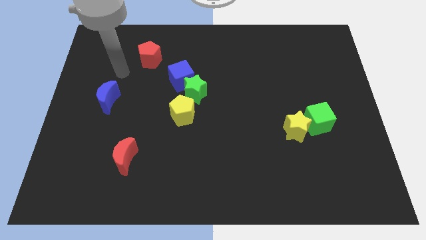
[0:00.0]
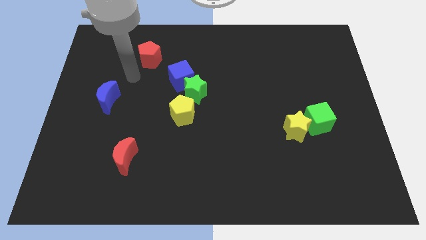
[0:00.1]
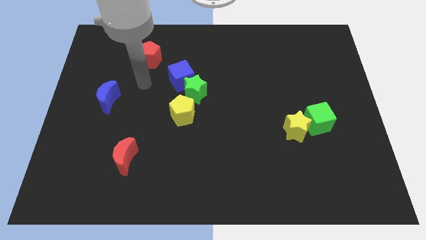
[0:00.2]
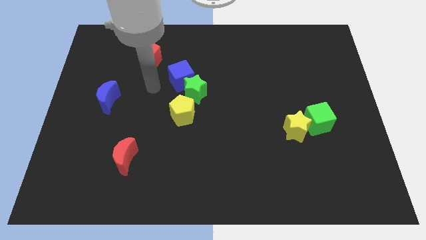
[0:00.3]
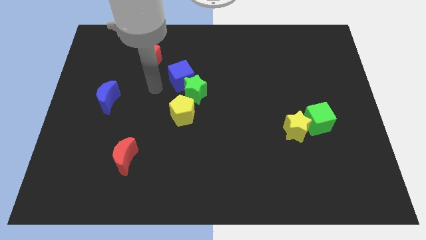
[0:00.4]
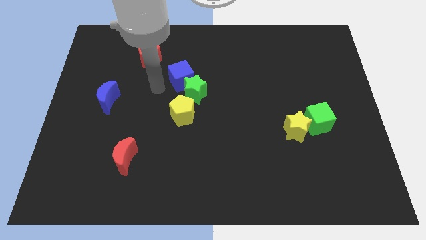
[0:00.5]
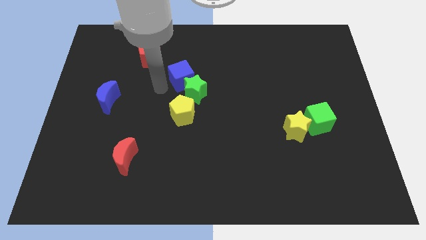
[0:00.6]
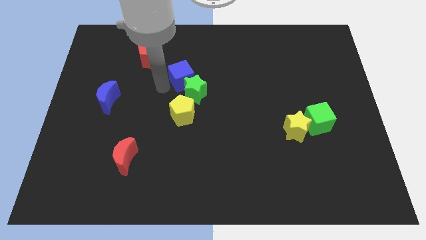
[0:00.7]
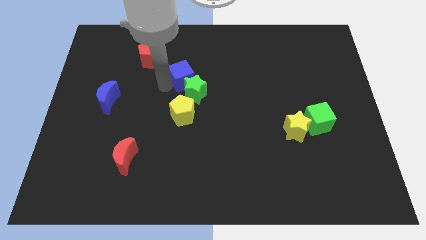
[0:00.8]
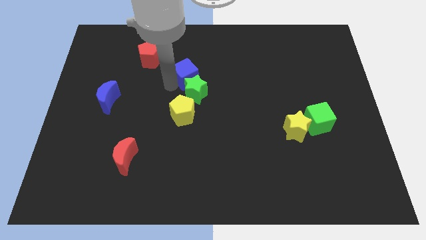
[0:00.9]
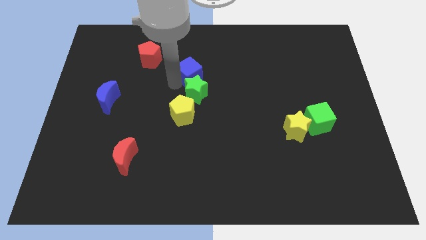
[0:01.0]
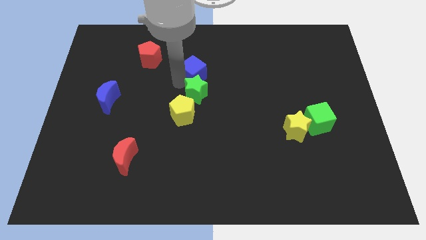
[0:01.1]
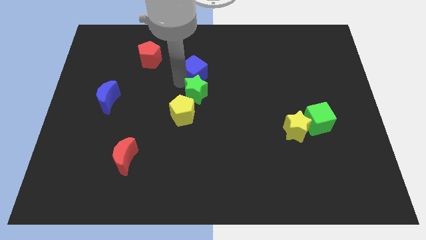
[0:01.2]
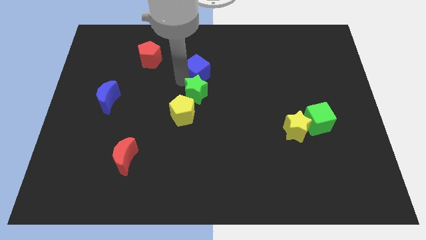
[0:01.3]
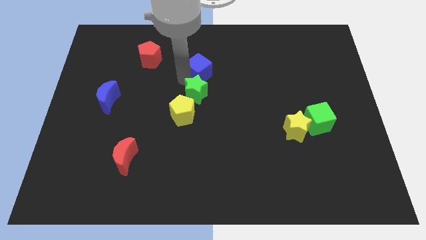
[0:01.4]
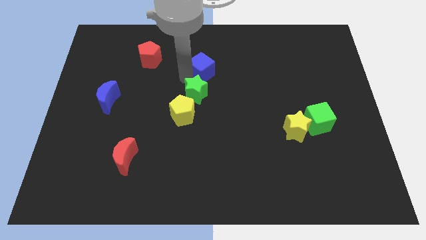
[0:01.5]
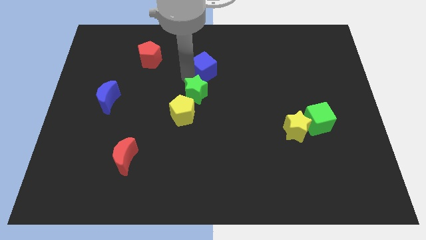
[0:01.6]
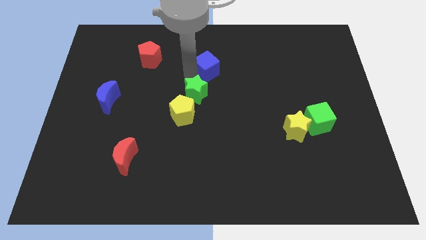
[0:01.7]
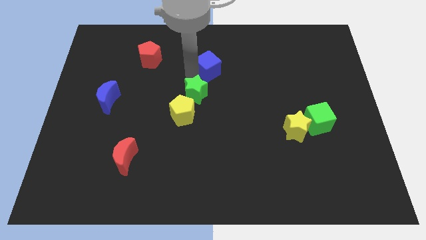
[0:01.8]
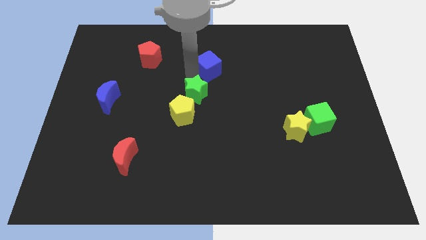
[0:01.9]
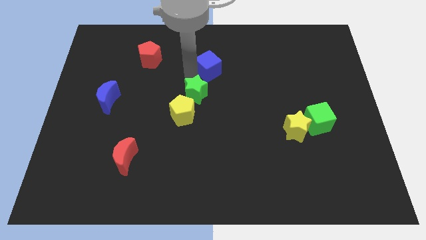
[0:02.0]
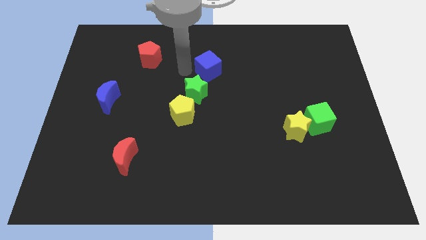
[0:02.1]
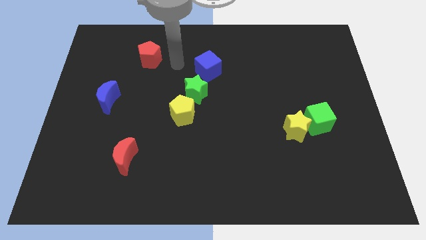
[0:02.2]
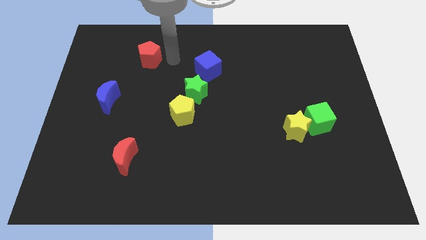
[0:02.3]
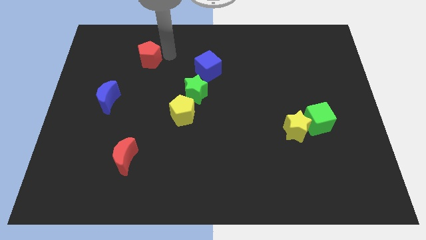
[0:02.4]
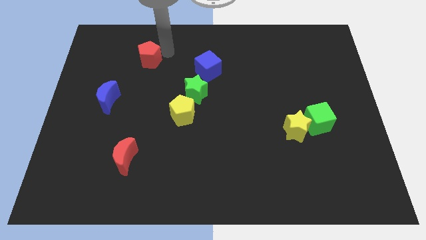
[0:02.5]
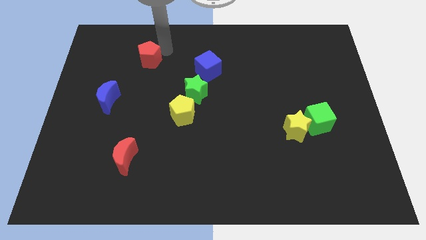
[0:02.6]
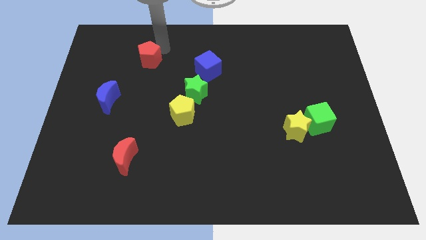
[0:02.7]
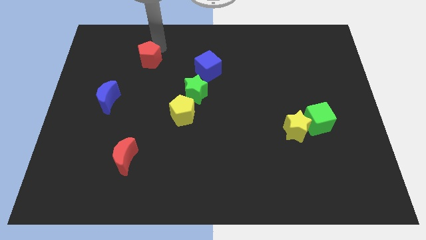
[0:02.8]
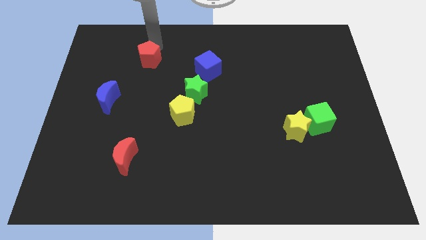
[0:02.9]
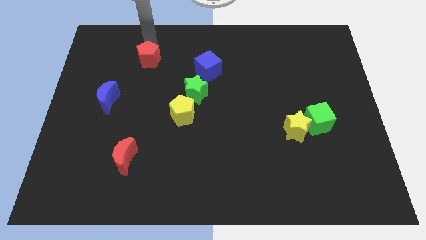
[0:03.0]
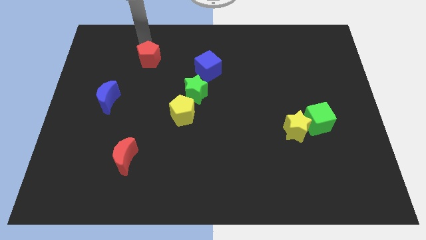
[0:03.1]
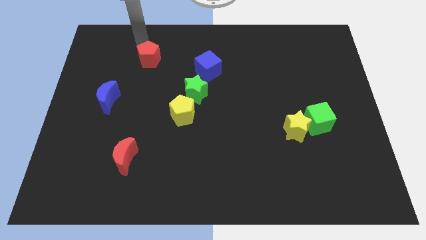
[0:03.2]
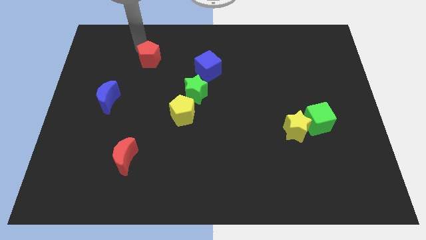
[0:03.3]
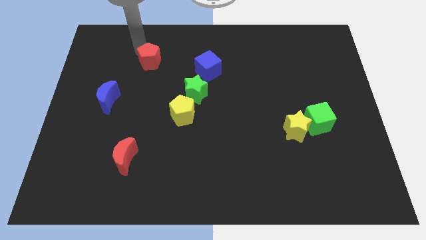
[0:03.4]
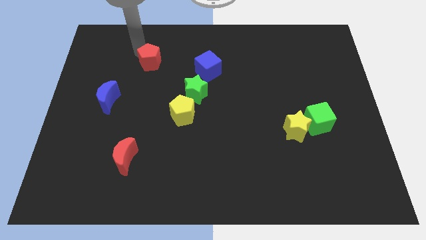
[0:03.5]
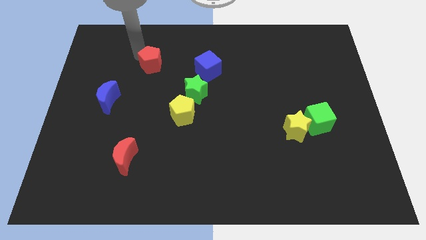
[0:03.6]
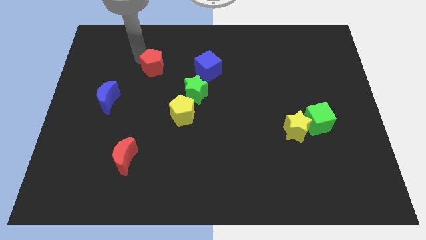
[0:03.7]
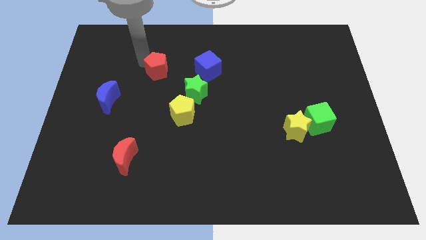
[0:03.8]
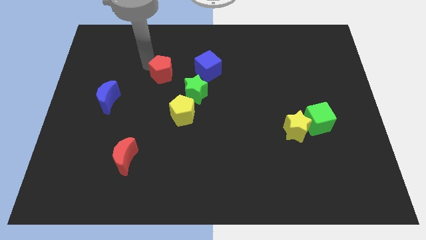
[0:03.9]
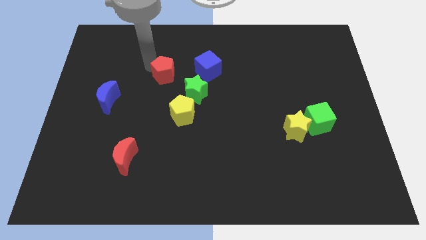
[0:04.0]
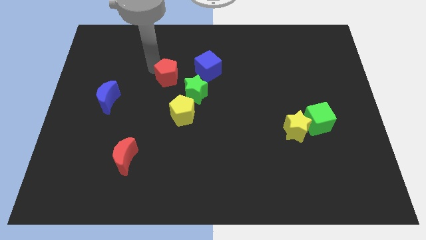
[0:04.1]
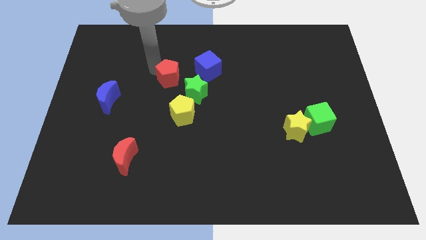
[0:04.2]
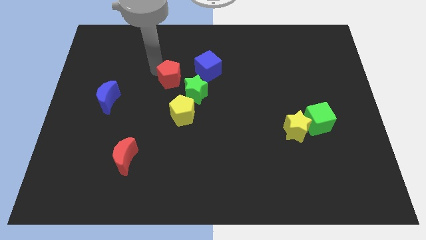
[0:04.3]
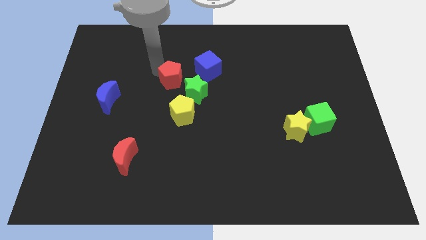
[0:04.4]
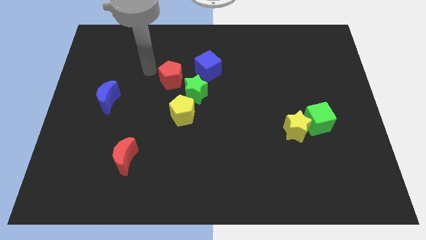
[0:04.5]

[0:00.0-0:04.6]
make a triangle with the green star blue cube and red pentagon above the yellow pentagon

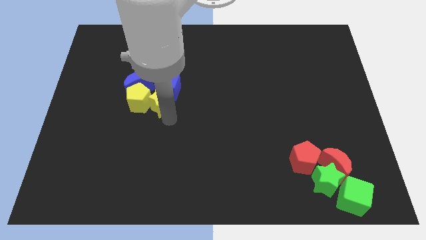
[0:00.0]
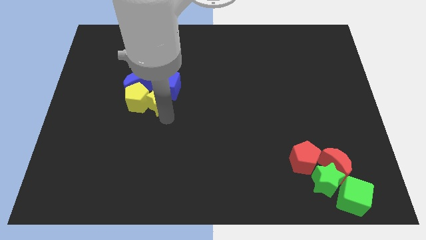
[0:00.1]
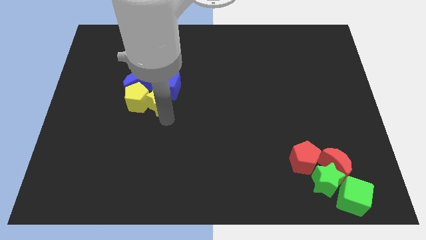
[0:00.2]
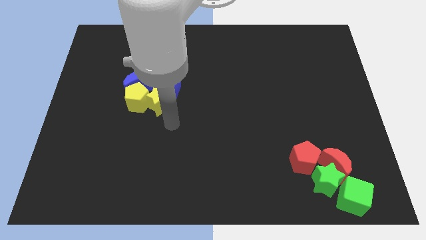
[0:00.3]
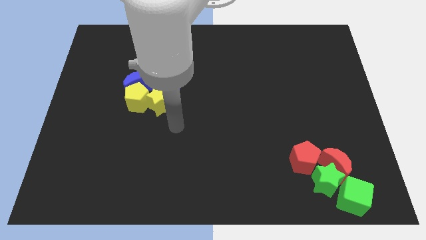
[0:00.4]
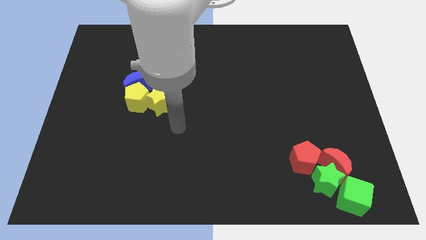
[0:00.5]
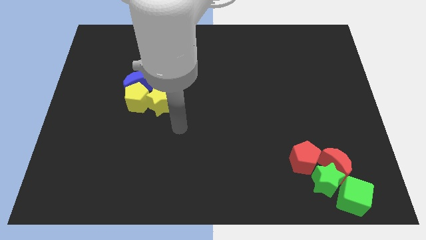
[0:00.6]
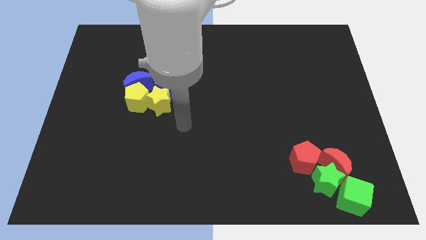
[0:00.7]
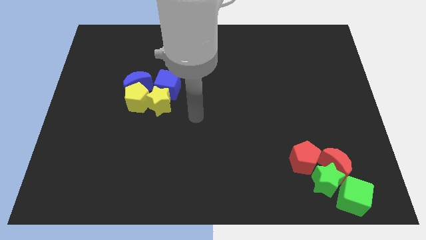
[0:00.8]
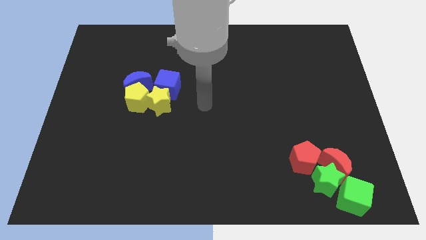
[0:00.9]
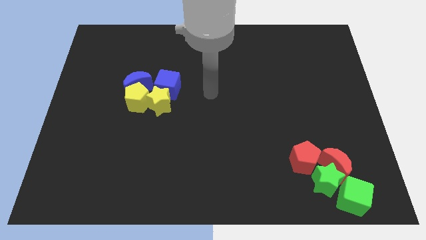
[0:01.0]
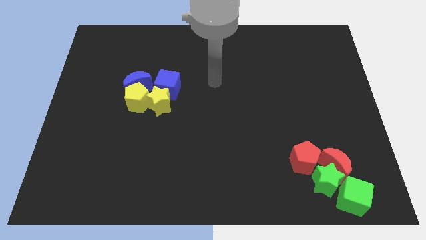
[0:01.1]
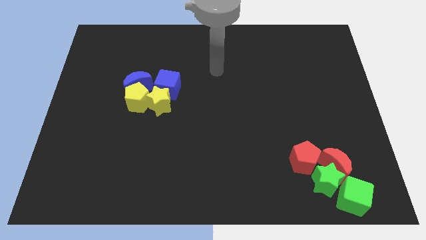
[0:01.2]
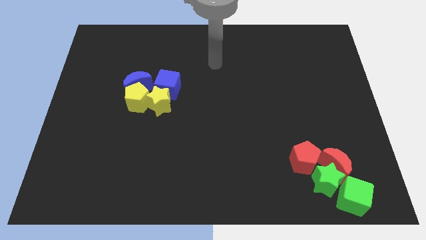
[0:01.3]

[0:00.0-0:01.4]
move your arm to the top center of the board

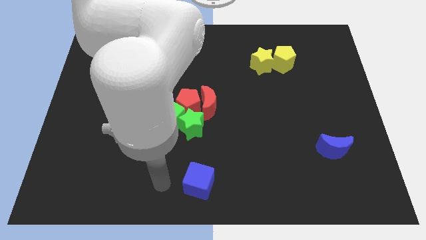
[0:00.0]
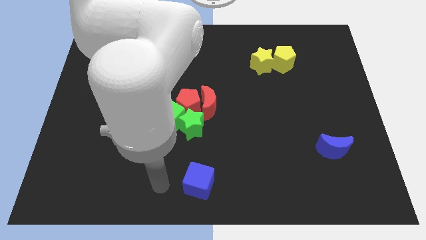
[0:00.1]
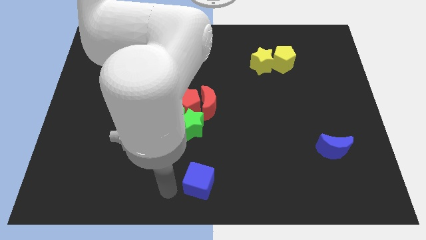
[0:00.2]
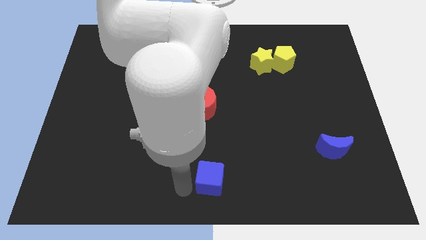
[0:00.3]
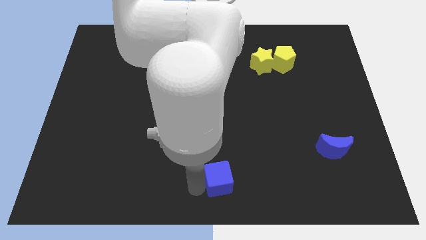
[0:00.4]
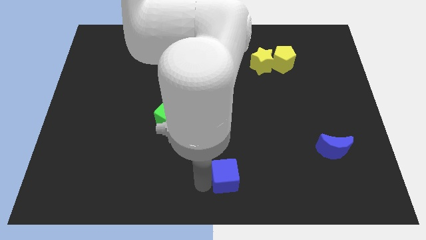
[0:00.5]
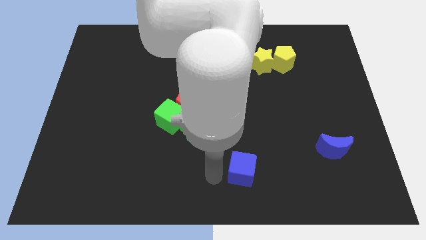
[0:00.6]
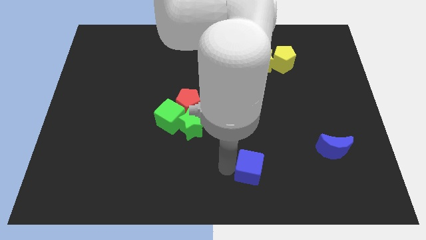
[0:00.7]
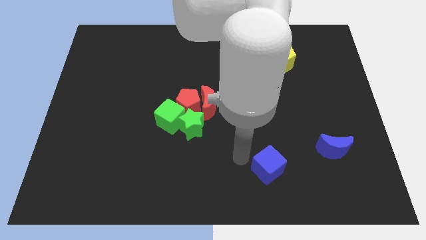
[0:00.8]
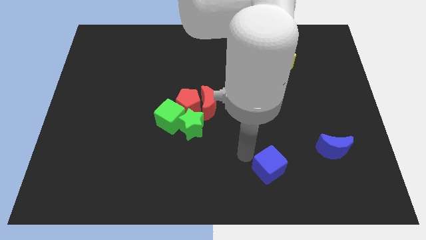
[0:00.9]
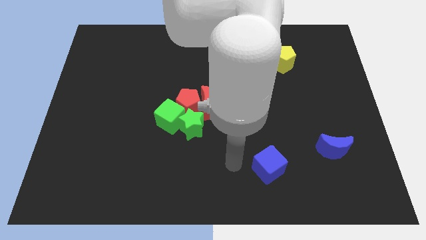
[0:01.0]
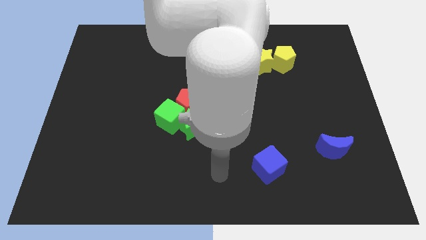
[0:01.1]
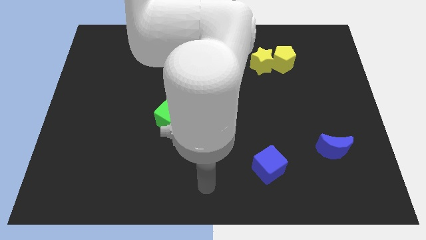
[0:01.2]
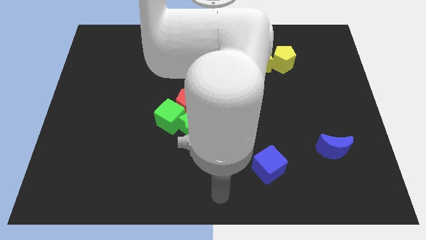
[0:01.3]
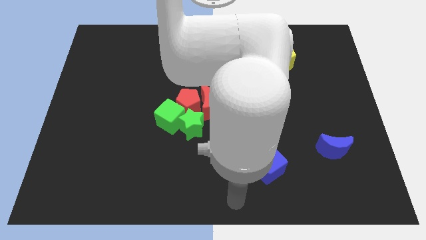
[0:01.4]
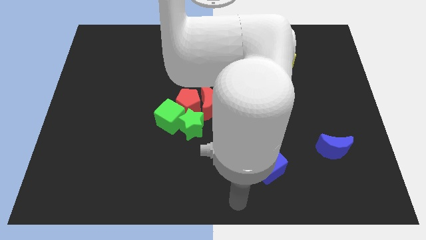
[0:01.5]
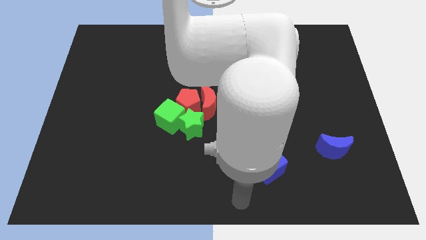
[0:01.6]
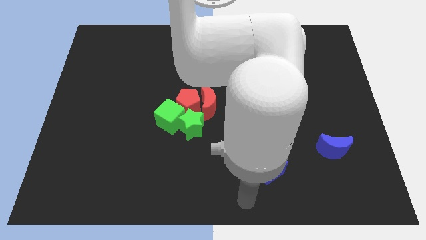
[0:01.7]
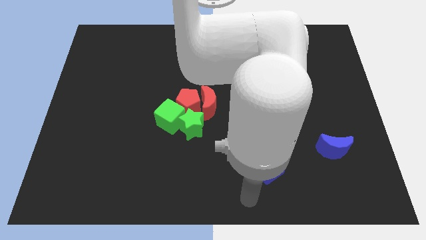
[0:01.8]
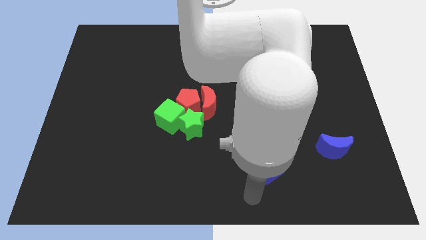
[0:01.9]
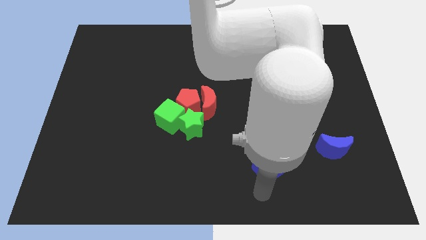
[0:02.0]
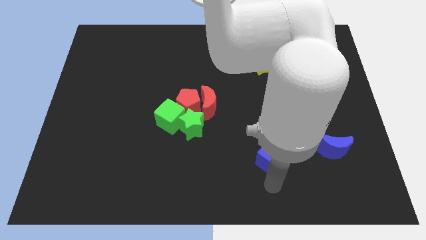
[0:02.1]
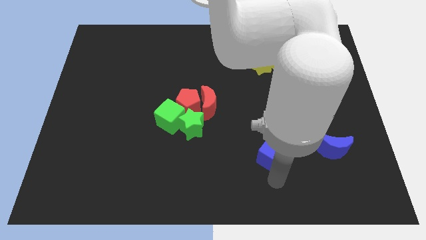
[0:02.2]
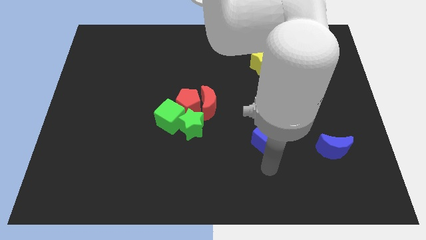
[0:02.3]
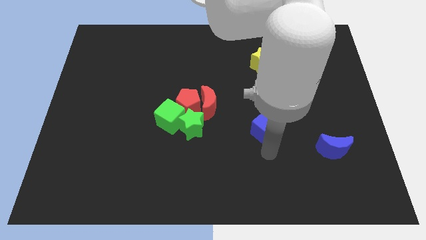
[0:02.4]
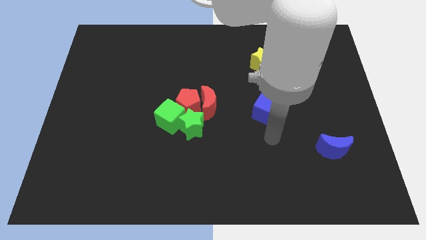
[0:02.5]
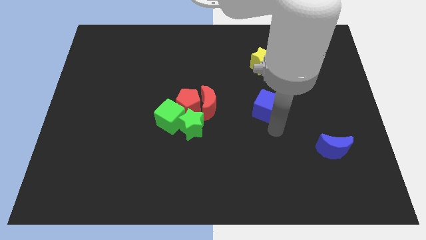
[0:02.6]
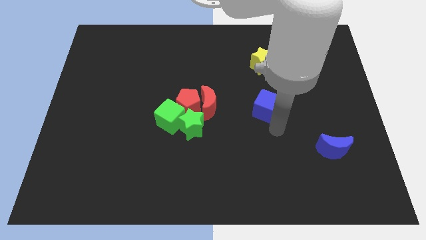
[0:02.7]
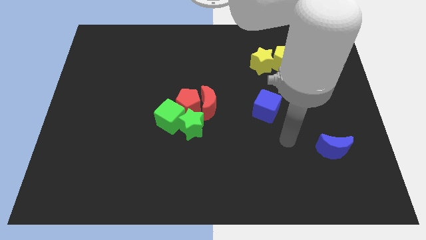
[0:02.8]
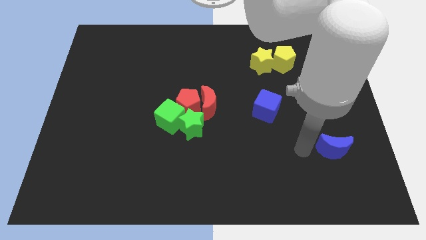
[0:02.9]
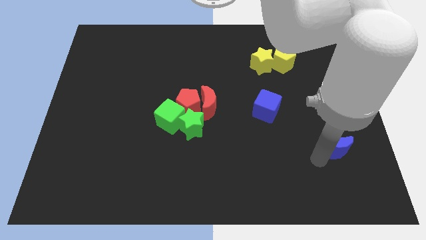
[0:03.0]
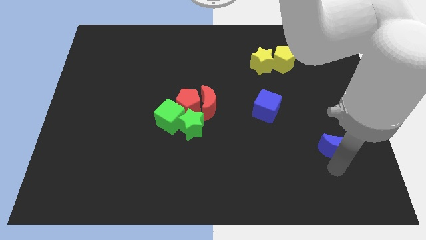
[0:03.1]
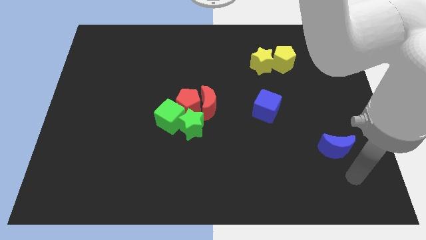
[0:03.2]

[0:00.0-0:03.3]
push the blue cube to the vertical bottom side of the yellow star
